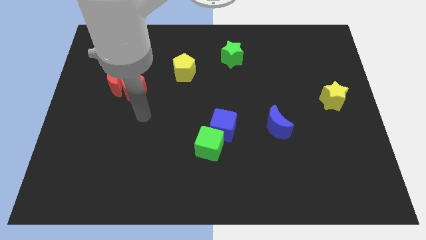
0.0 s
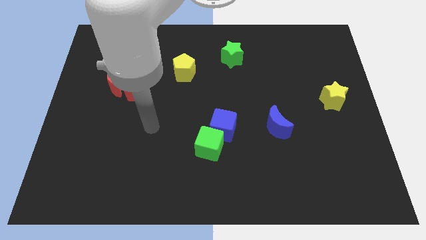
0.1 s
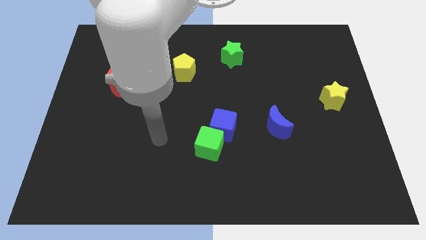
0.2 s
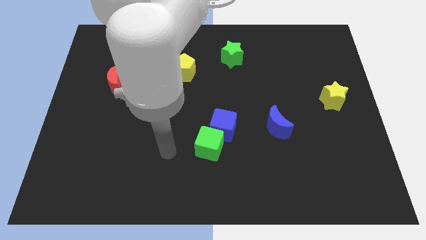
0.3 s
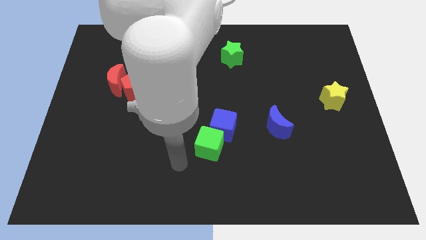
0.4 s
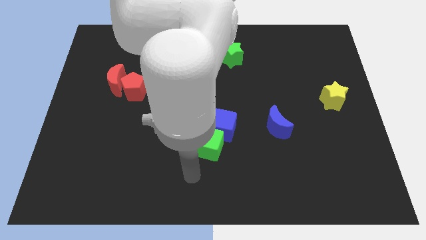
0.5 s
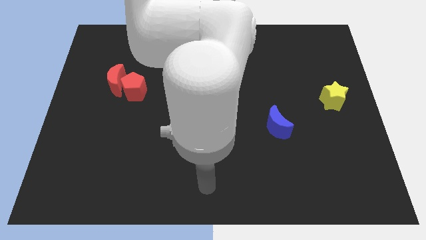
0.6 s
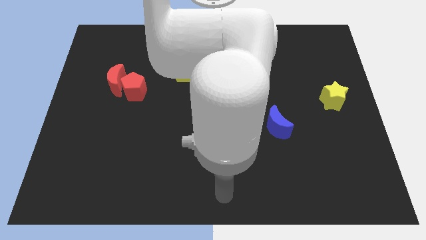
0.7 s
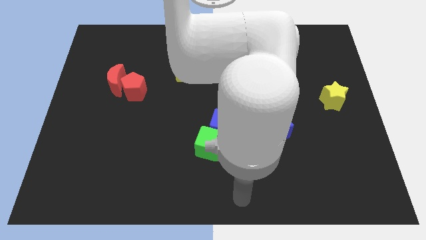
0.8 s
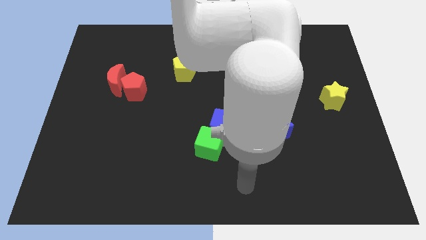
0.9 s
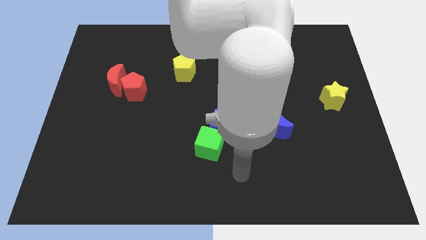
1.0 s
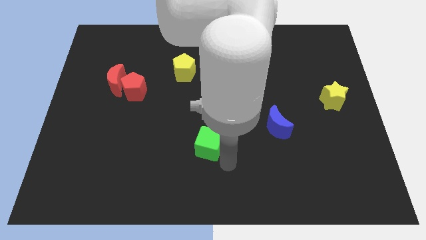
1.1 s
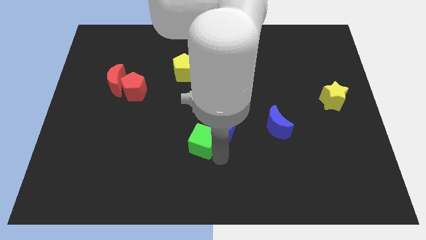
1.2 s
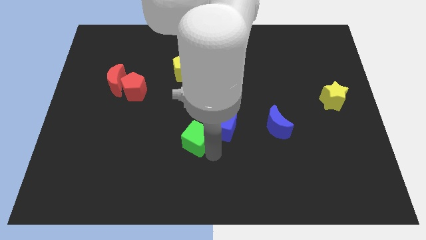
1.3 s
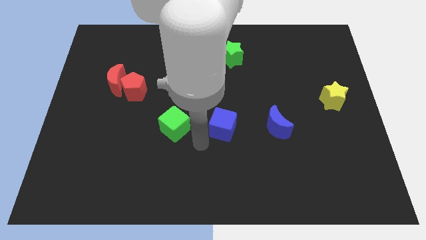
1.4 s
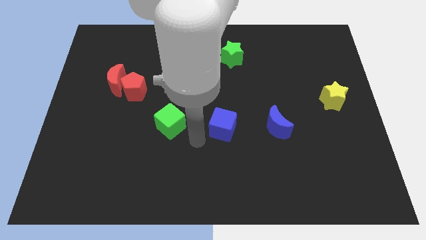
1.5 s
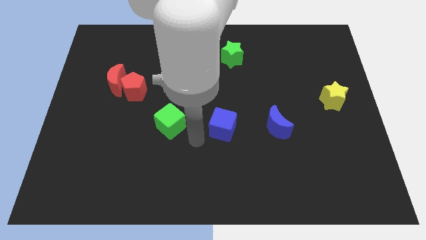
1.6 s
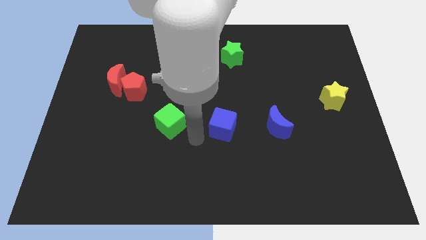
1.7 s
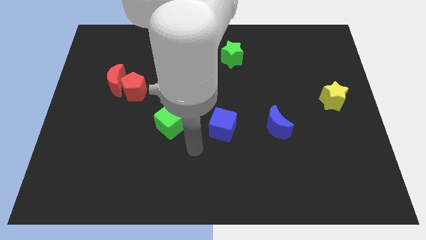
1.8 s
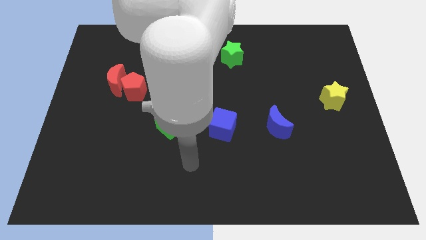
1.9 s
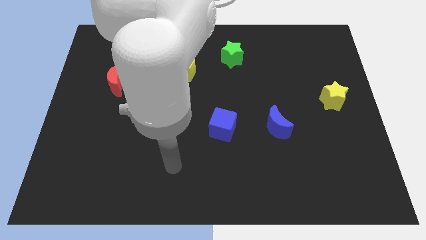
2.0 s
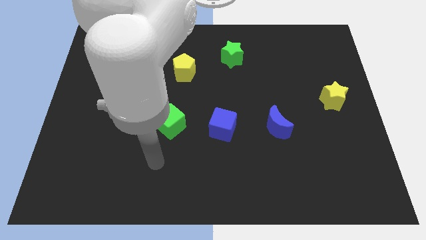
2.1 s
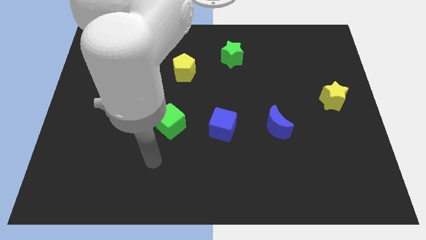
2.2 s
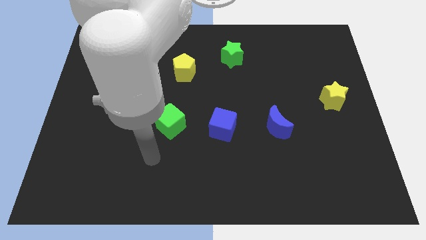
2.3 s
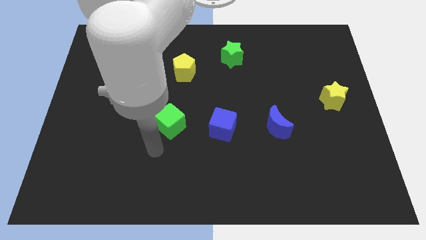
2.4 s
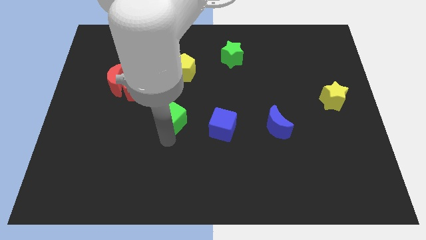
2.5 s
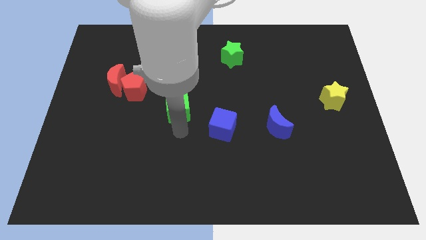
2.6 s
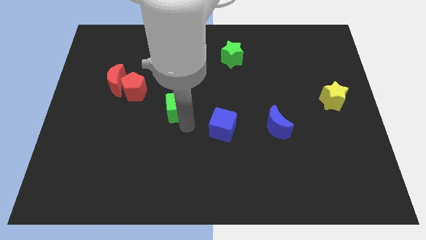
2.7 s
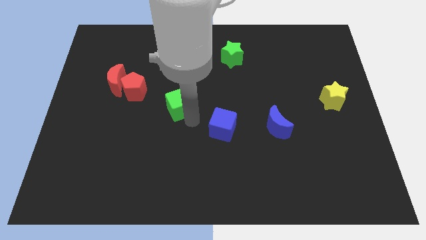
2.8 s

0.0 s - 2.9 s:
place the green cube below the yellow pentagon

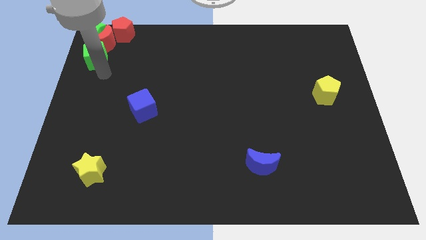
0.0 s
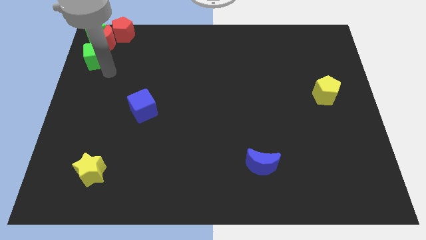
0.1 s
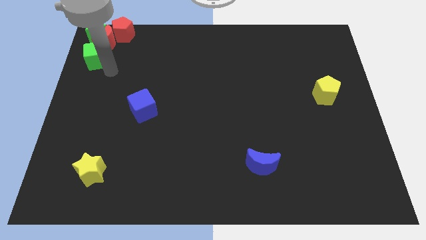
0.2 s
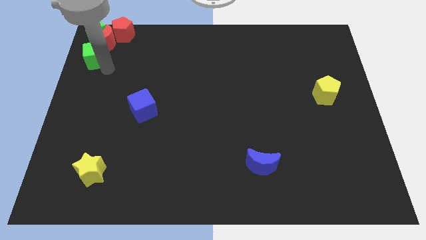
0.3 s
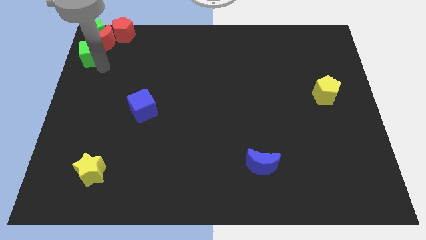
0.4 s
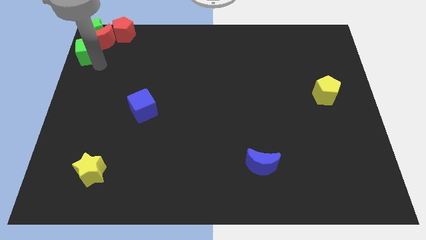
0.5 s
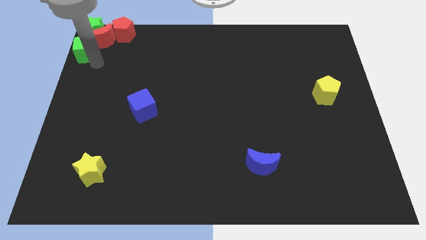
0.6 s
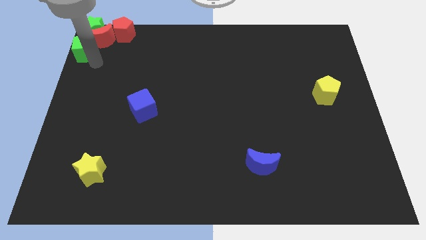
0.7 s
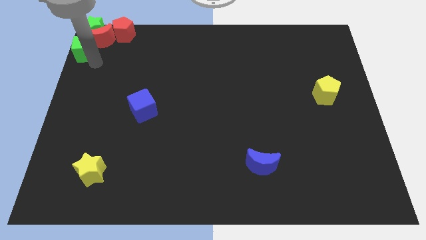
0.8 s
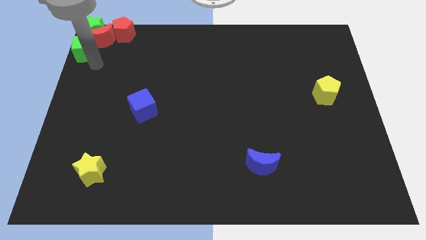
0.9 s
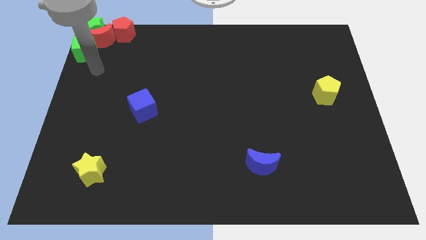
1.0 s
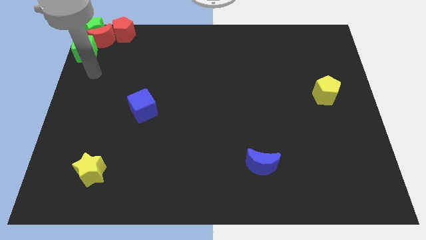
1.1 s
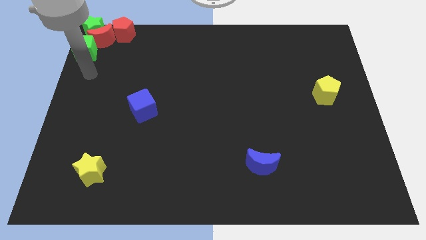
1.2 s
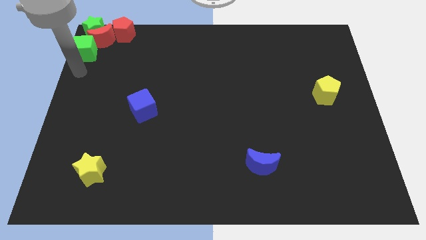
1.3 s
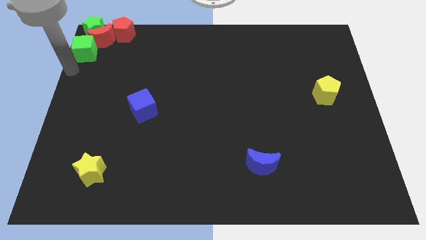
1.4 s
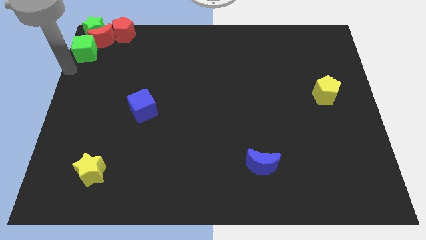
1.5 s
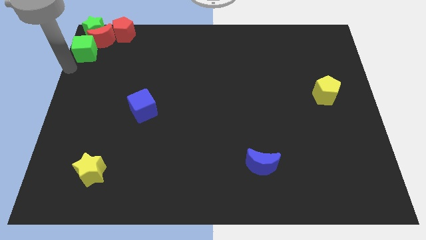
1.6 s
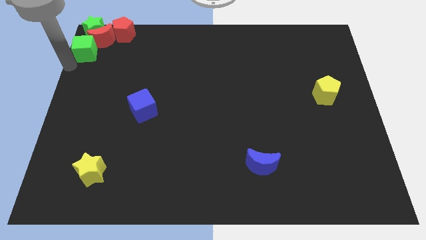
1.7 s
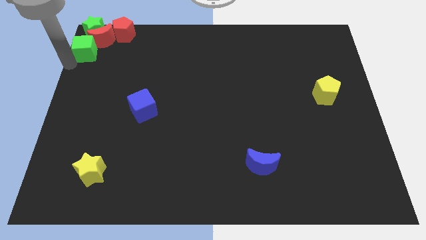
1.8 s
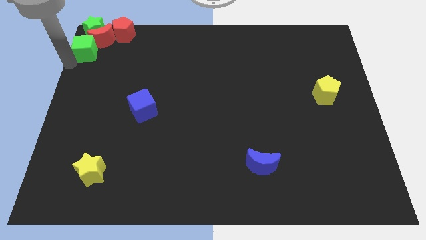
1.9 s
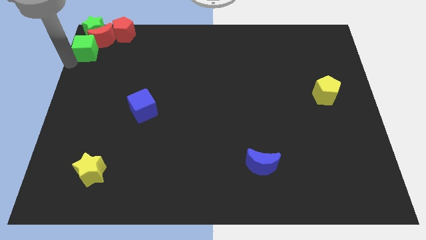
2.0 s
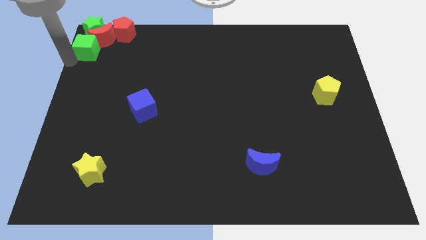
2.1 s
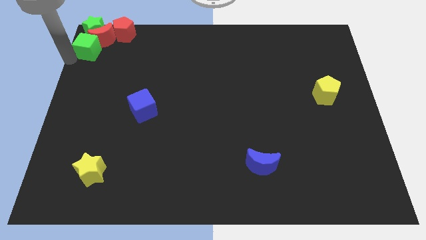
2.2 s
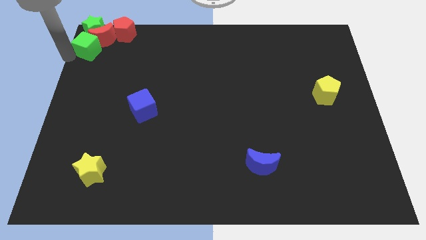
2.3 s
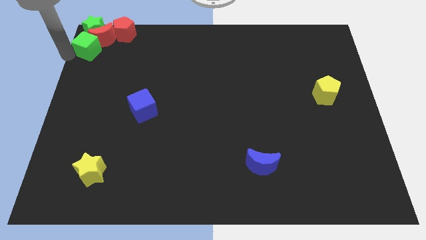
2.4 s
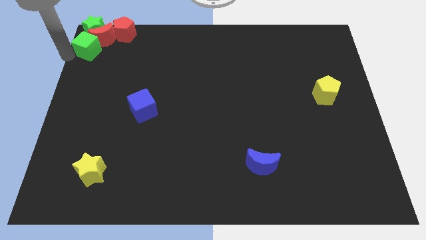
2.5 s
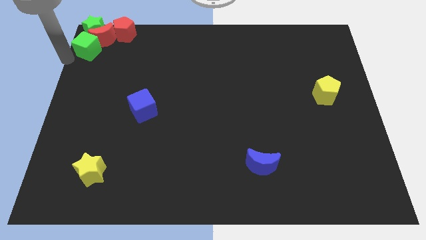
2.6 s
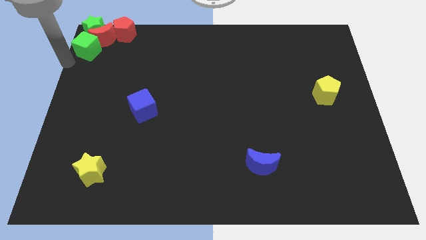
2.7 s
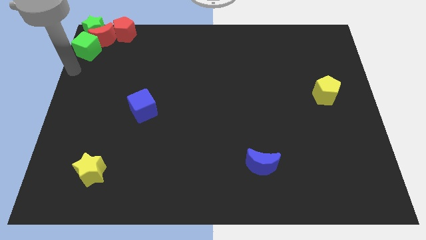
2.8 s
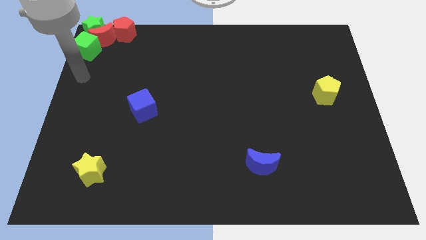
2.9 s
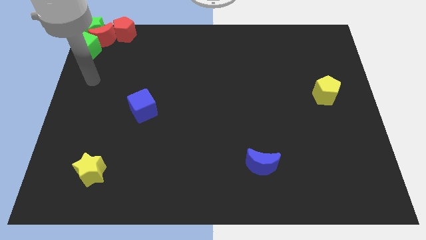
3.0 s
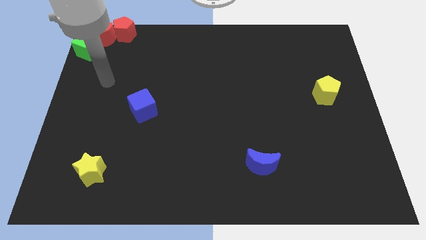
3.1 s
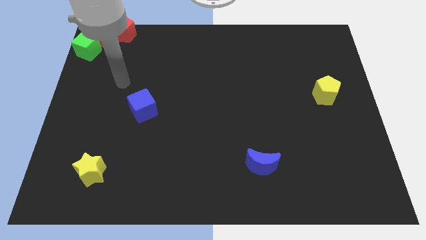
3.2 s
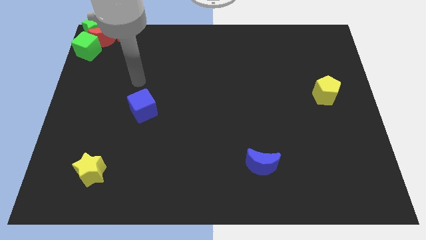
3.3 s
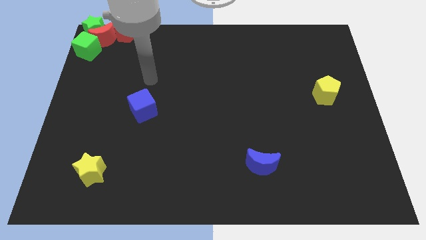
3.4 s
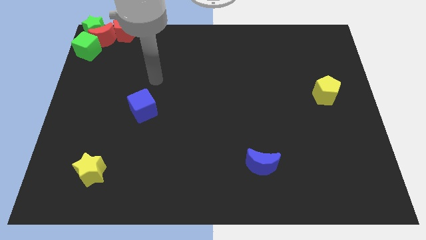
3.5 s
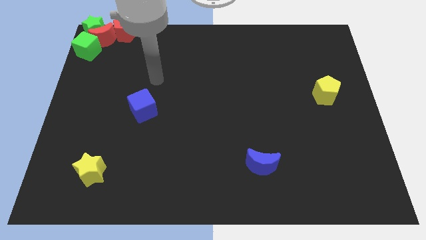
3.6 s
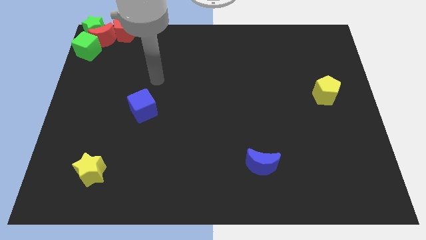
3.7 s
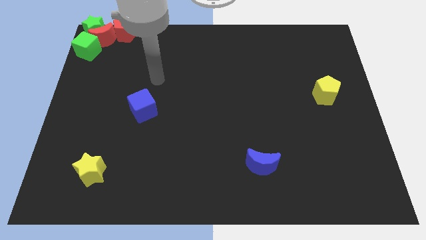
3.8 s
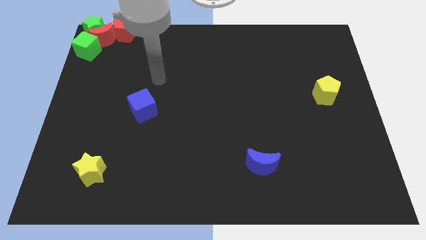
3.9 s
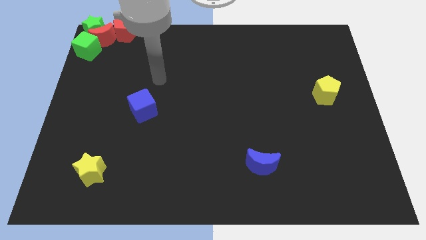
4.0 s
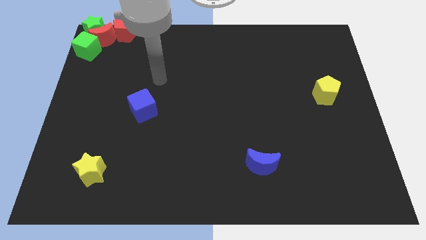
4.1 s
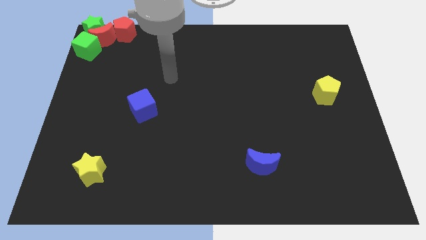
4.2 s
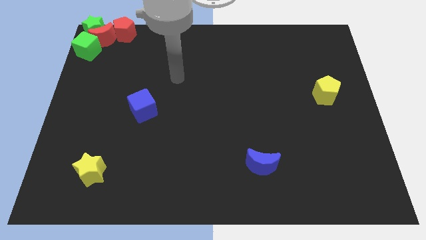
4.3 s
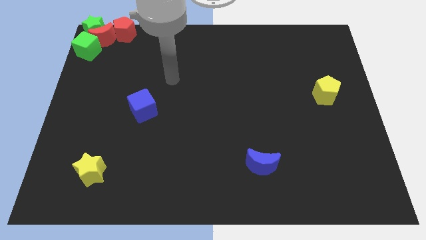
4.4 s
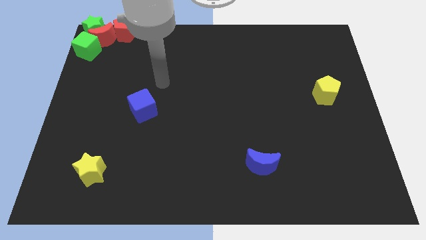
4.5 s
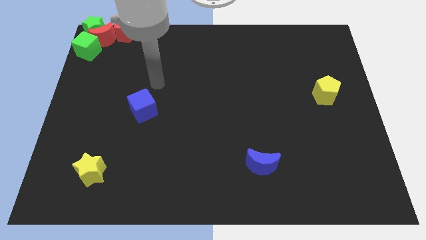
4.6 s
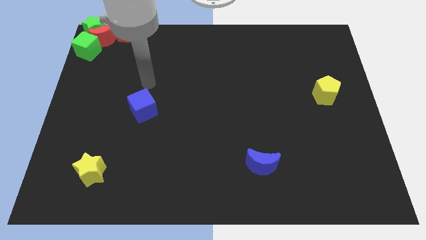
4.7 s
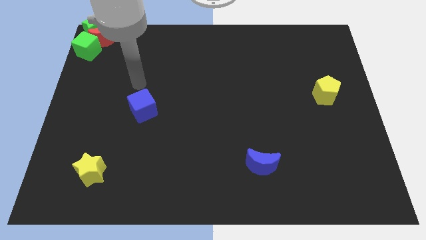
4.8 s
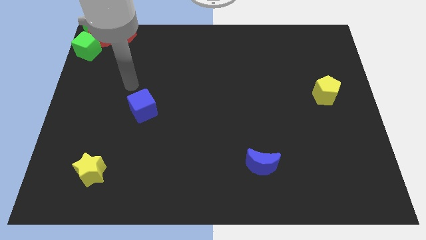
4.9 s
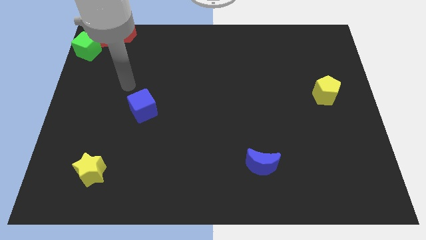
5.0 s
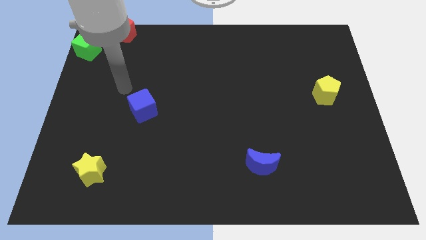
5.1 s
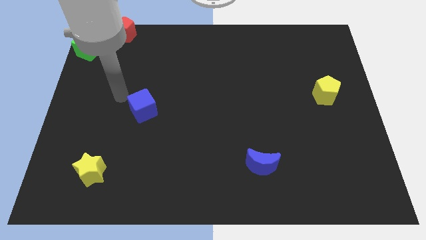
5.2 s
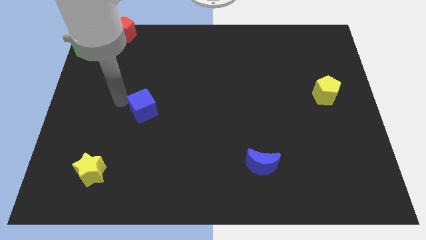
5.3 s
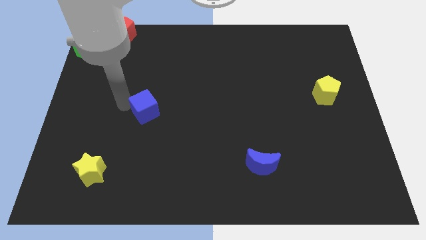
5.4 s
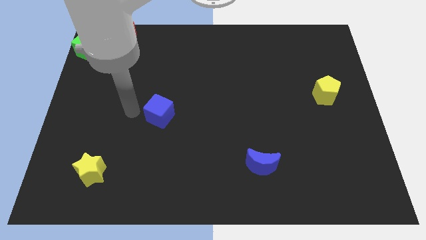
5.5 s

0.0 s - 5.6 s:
push the green cube into the red crescent

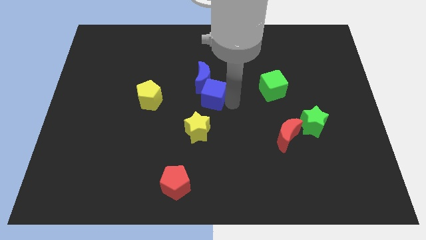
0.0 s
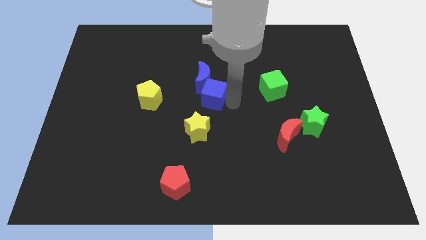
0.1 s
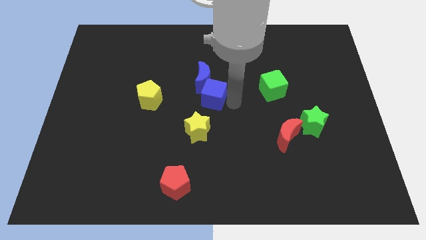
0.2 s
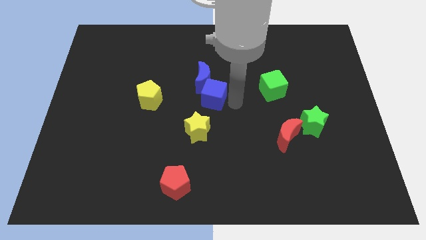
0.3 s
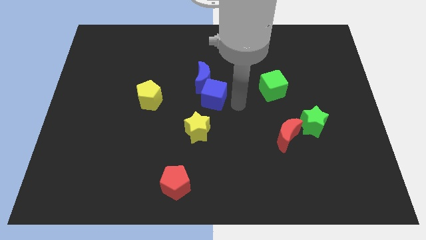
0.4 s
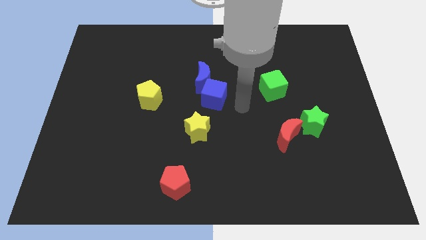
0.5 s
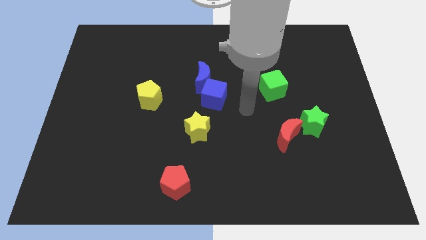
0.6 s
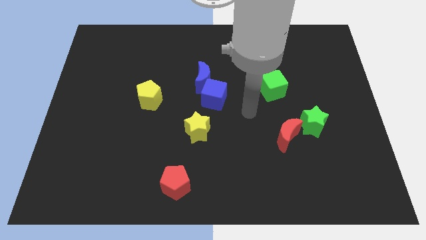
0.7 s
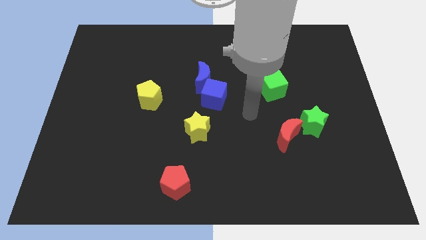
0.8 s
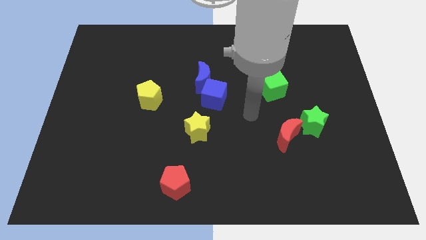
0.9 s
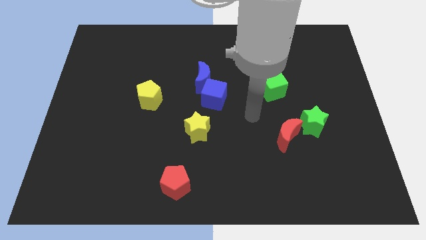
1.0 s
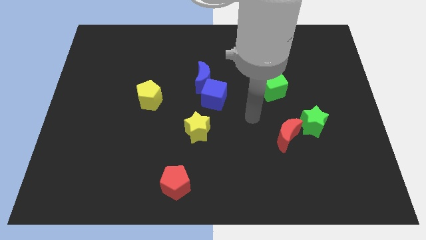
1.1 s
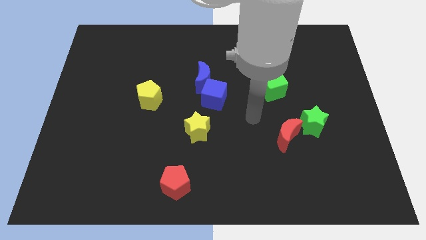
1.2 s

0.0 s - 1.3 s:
place the arm between the blue cube and red moon
